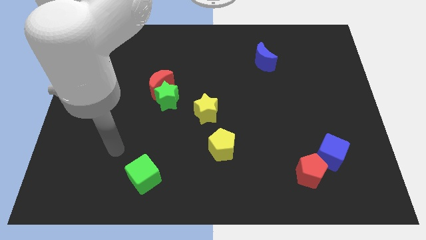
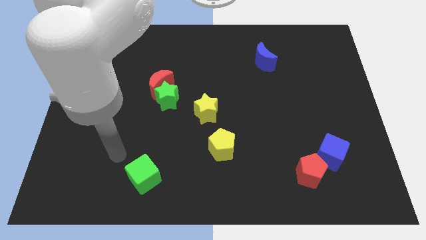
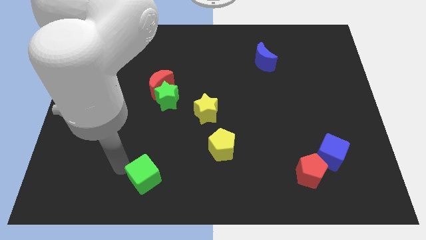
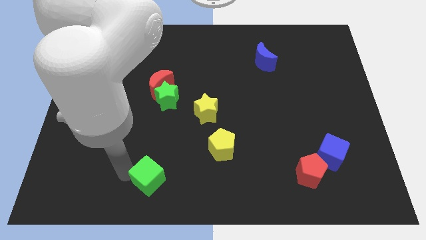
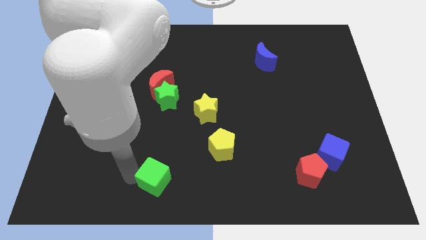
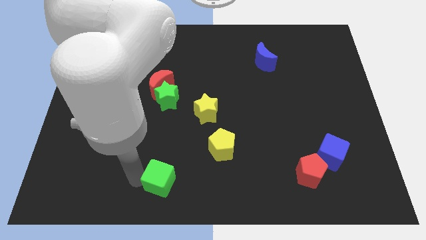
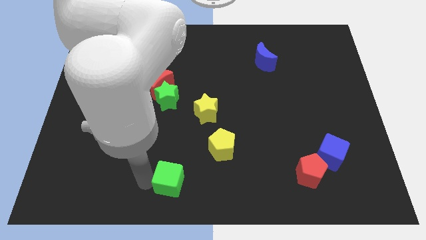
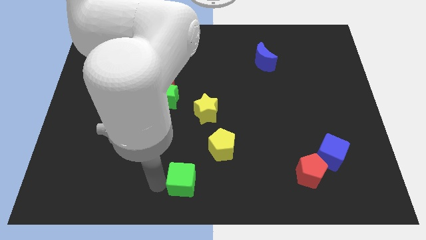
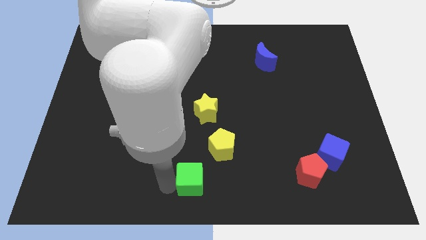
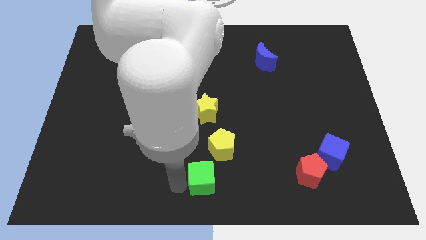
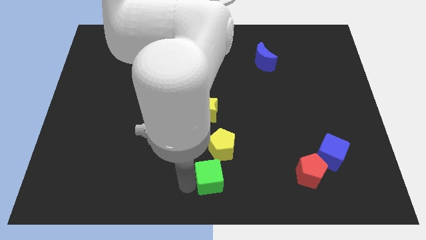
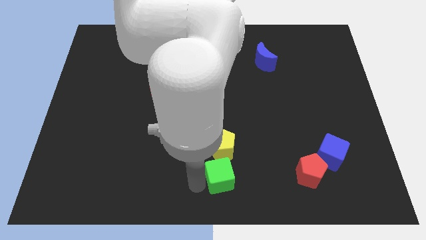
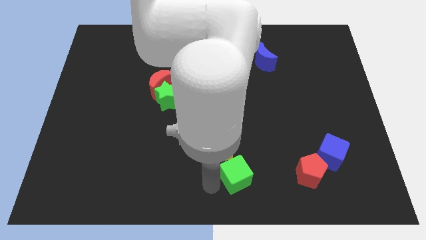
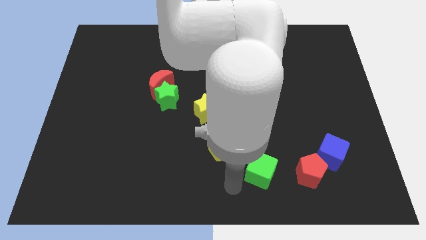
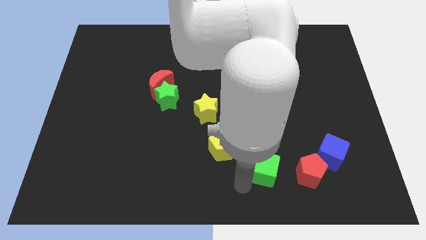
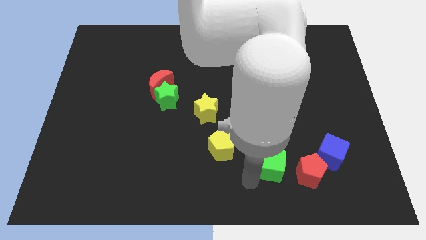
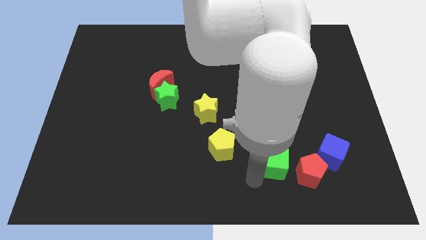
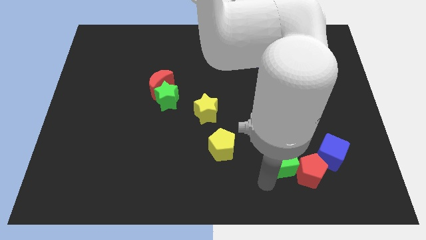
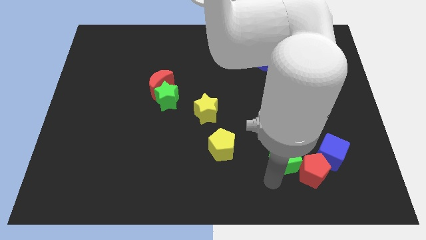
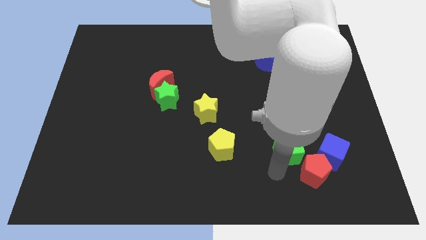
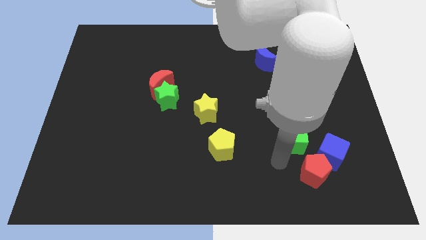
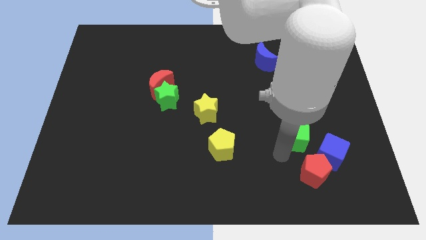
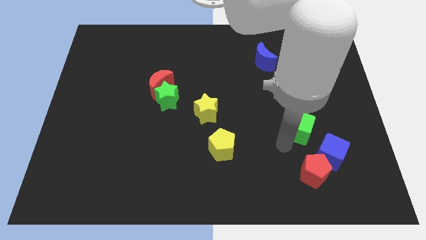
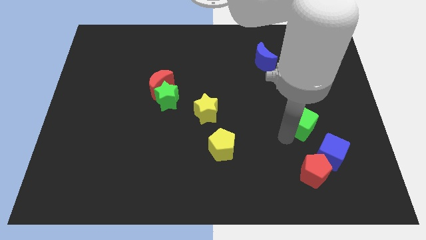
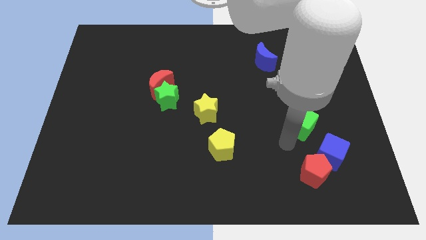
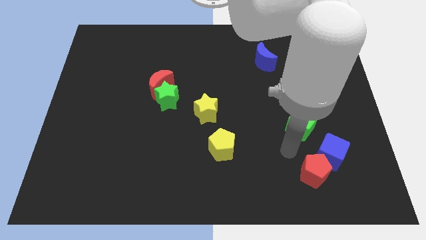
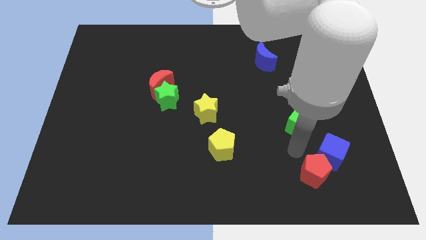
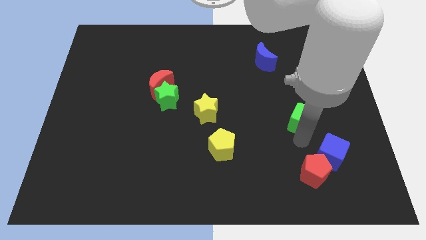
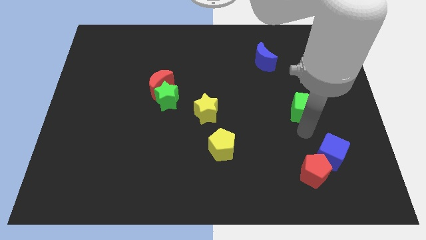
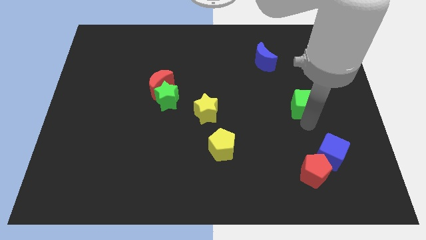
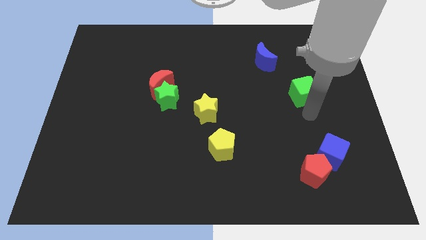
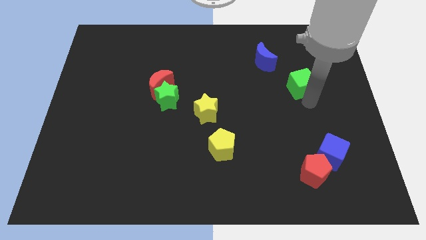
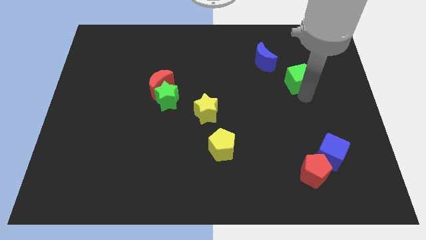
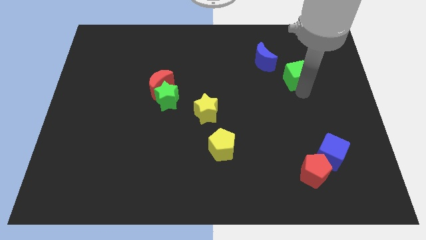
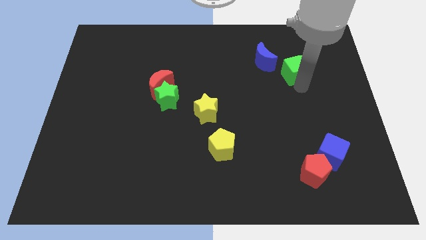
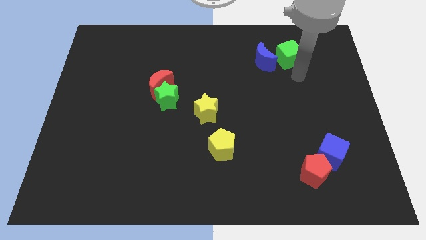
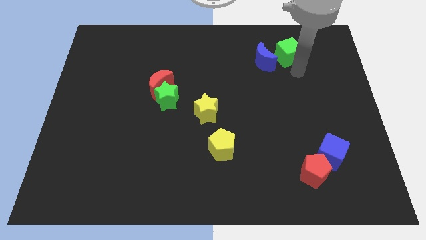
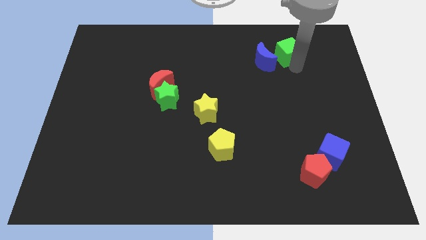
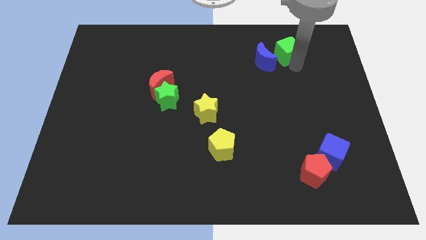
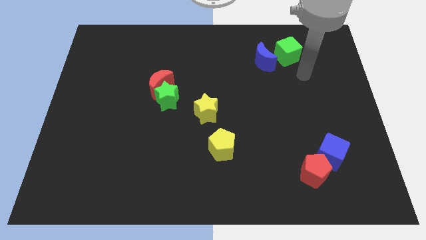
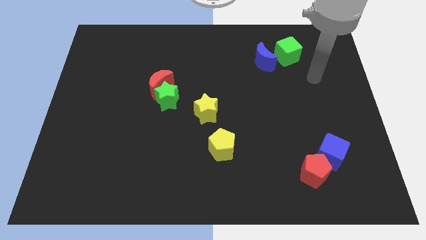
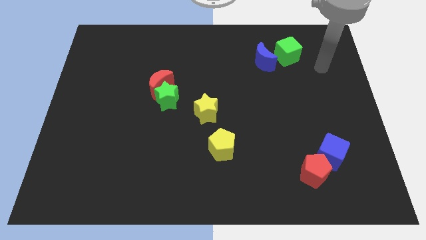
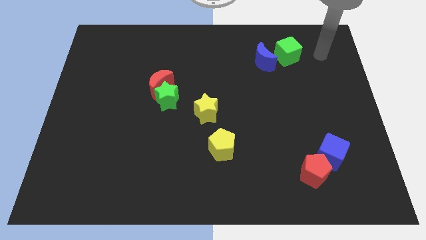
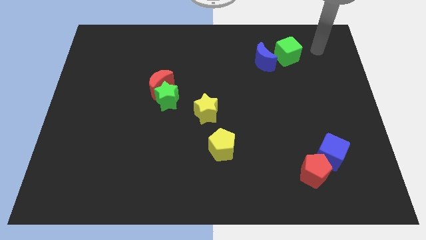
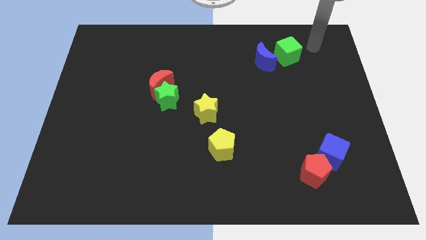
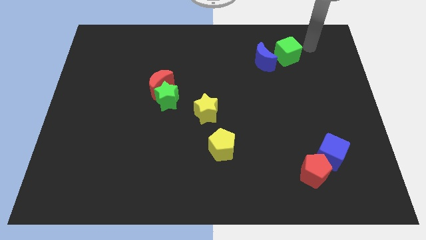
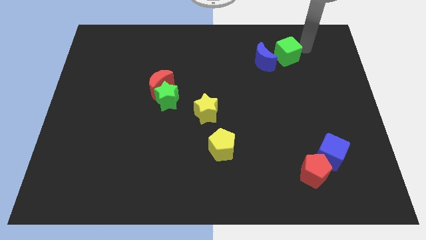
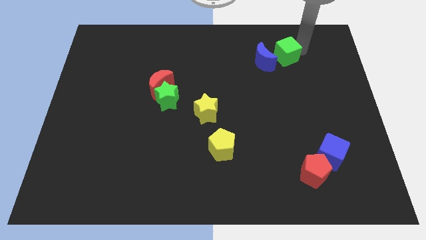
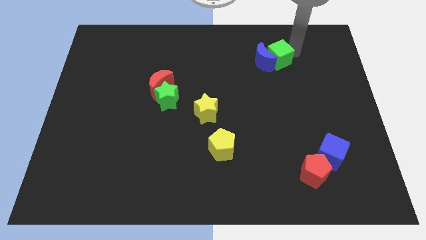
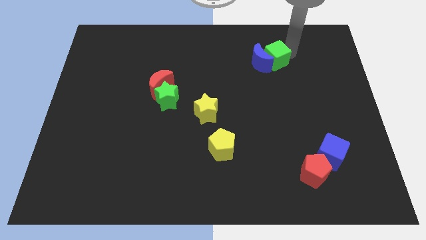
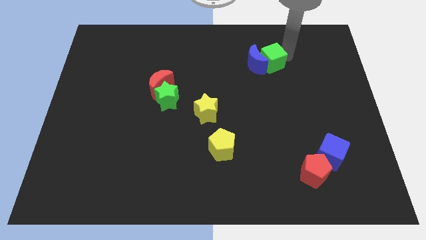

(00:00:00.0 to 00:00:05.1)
put the green cube close to the blue moon

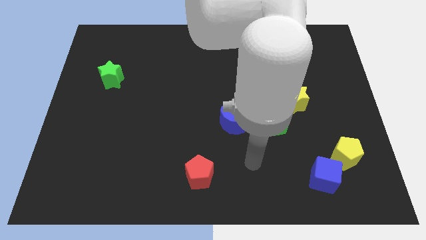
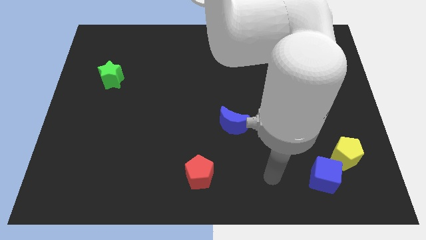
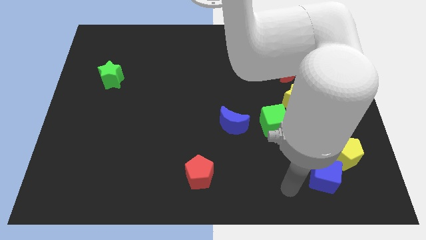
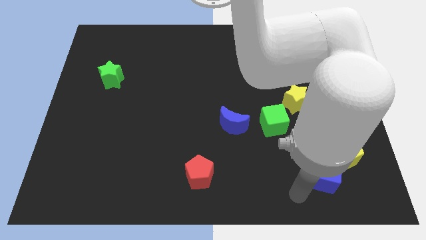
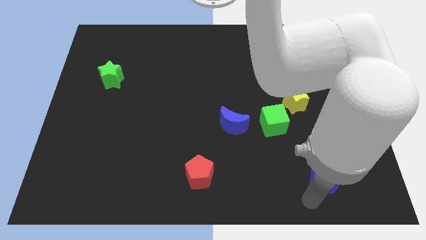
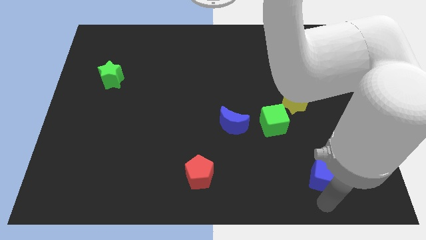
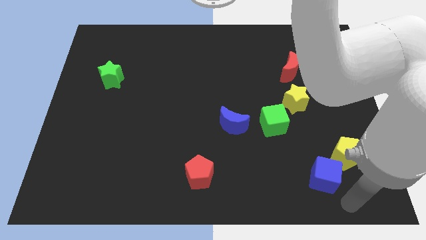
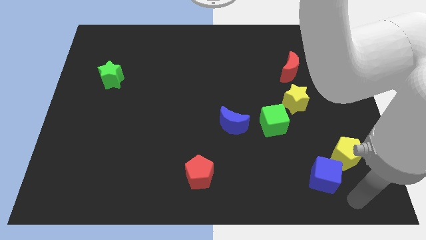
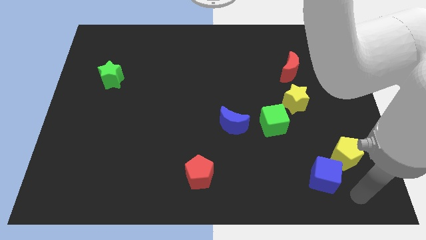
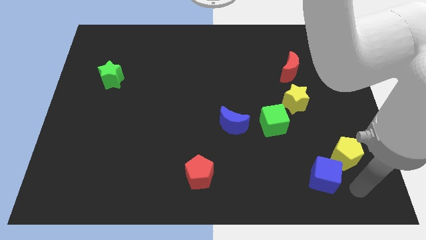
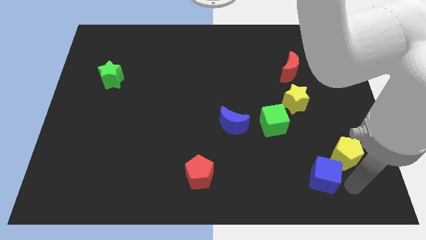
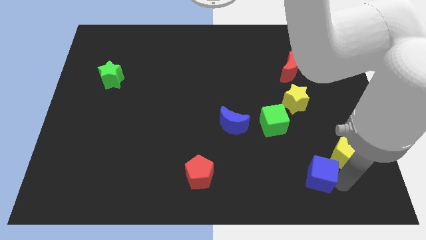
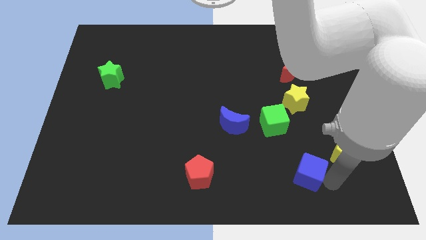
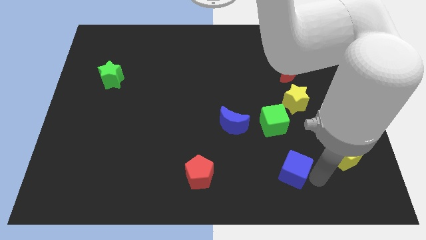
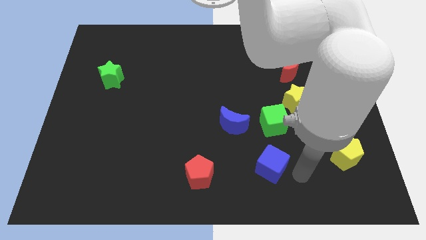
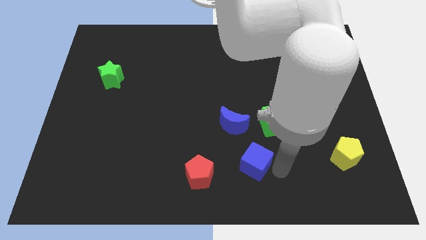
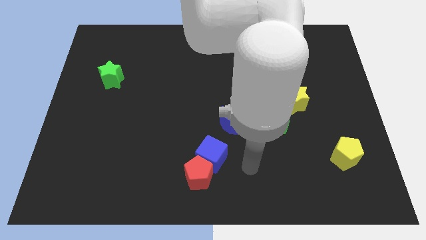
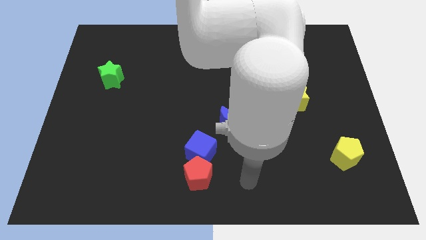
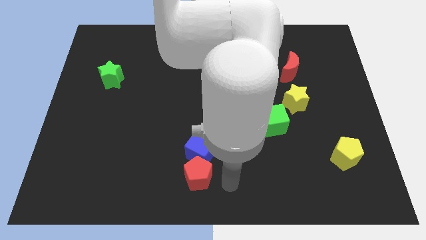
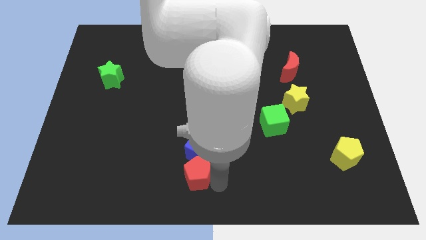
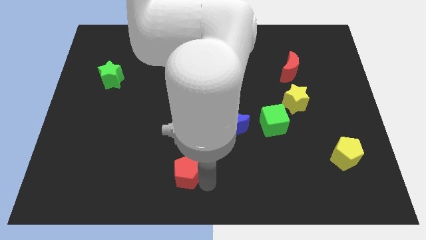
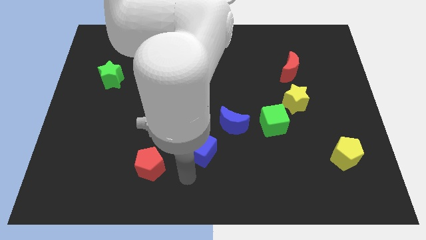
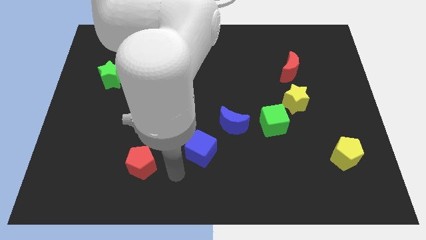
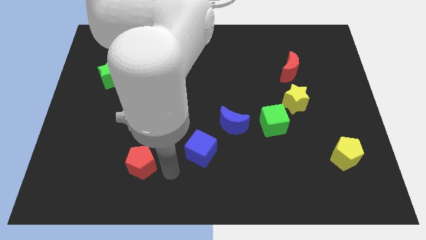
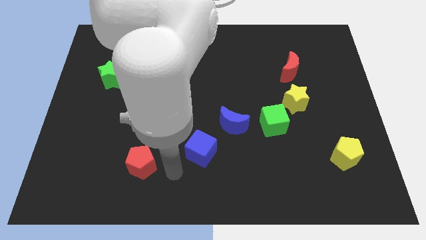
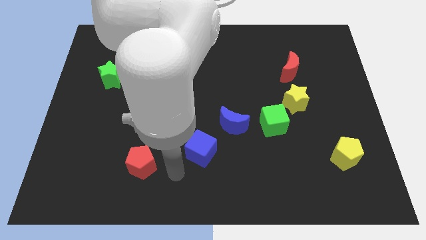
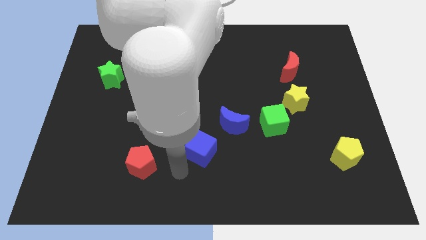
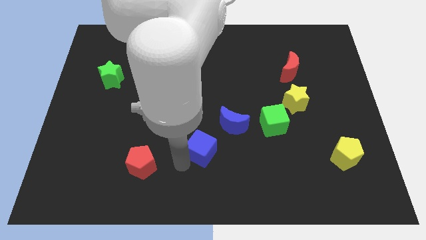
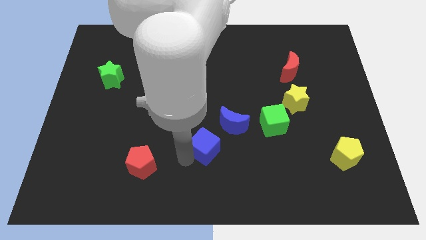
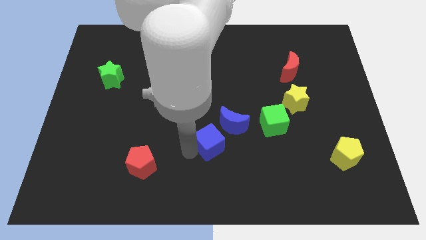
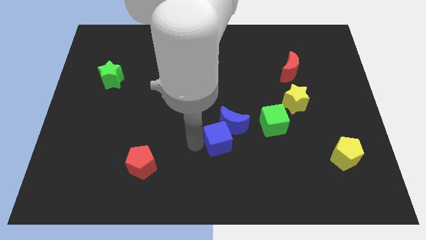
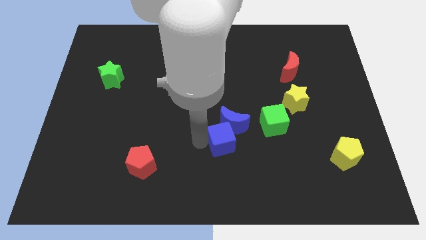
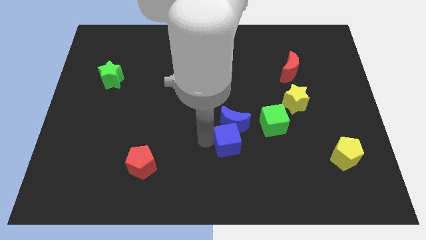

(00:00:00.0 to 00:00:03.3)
move the blue cube close to the blue moon
